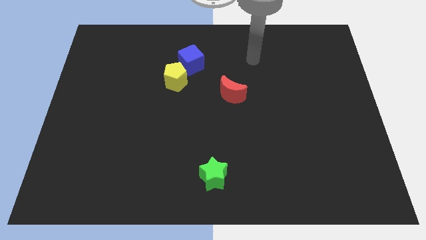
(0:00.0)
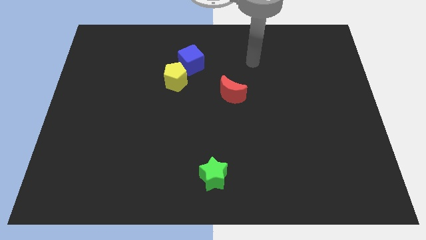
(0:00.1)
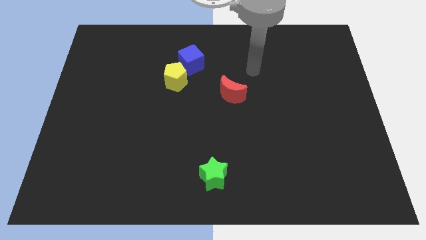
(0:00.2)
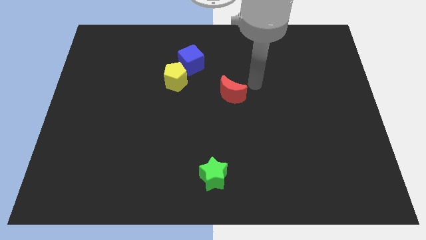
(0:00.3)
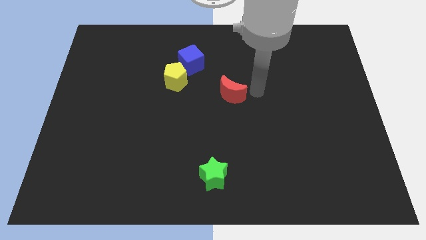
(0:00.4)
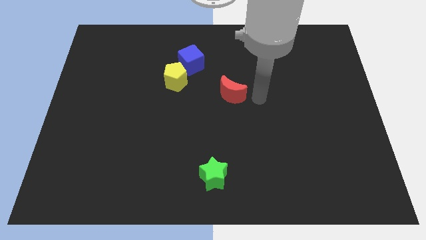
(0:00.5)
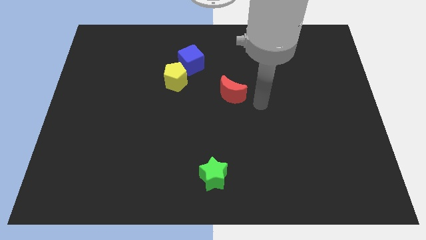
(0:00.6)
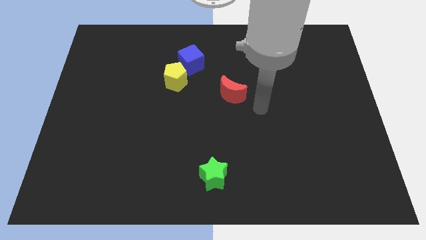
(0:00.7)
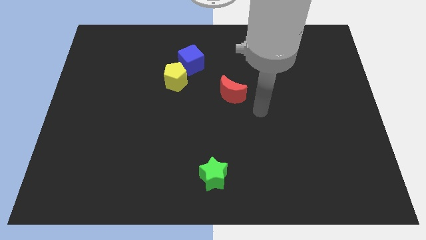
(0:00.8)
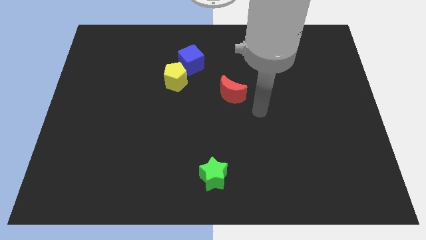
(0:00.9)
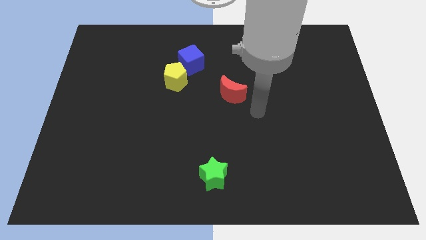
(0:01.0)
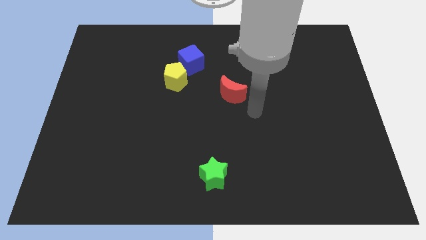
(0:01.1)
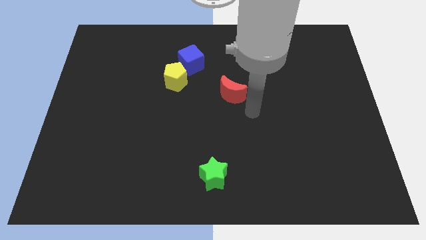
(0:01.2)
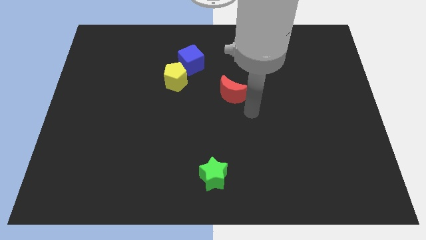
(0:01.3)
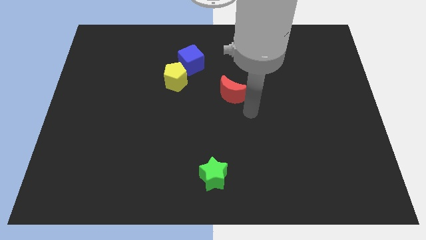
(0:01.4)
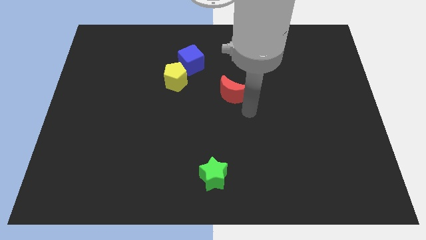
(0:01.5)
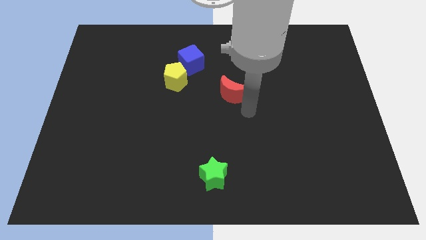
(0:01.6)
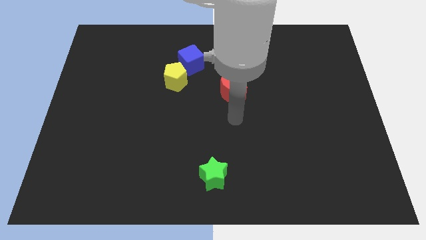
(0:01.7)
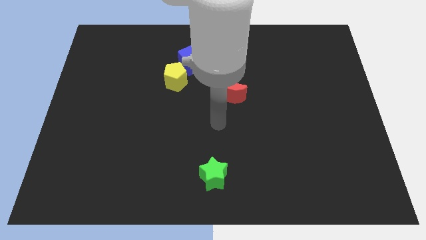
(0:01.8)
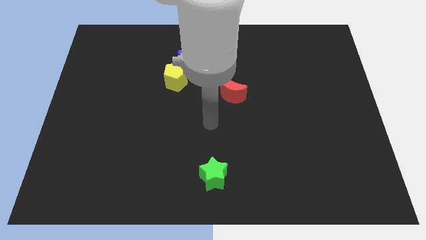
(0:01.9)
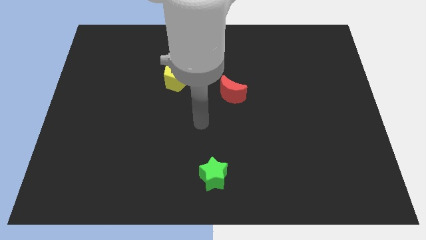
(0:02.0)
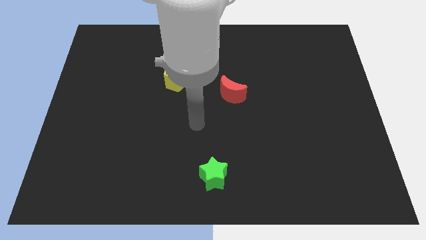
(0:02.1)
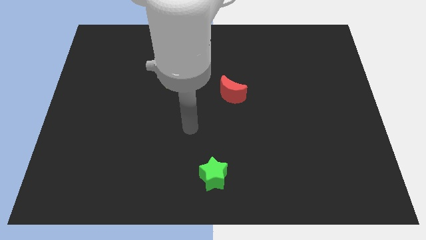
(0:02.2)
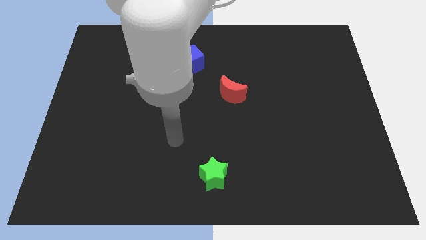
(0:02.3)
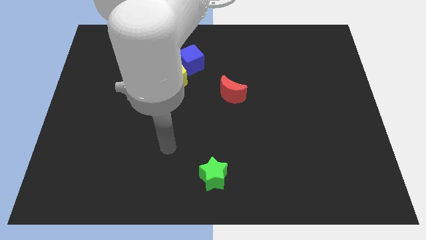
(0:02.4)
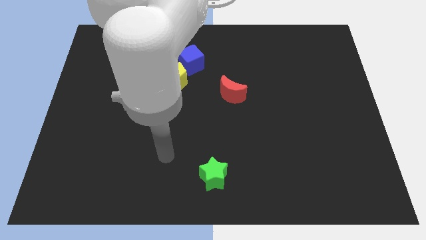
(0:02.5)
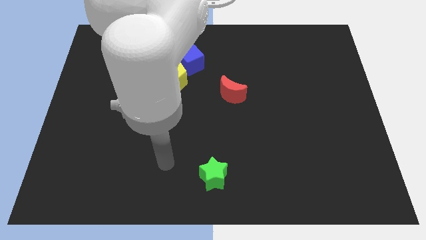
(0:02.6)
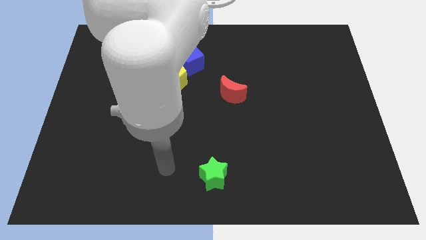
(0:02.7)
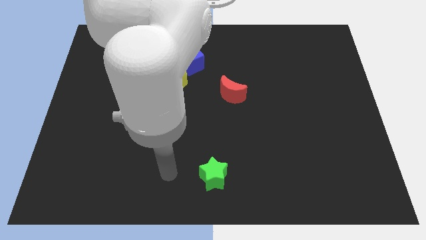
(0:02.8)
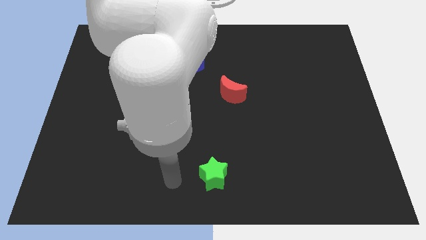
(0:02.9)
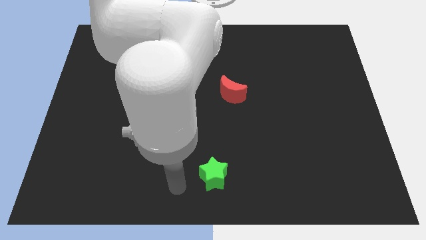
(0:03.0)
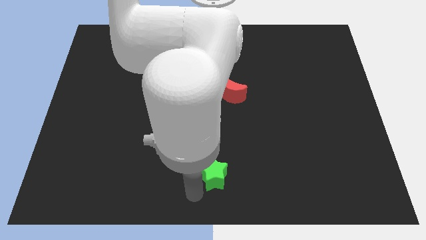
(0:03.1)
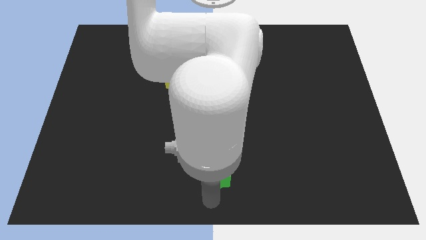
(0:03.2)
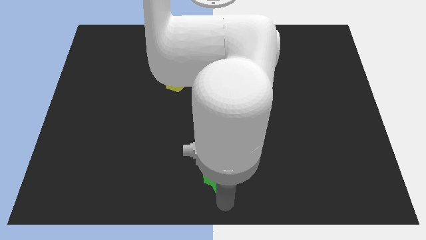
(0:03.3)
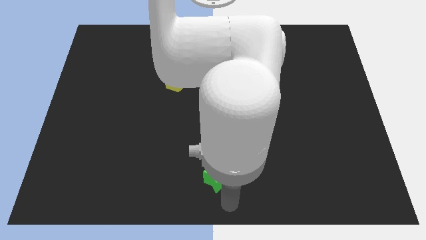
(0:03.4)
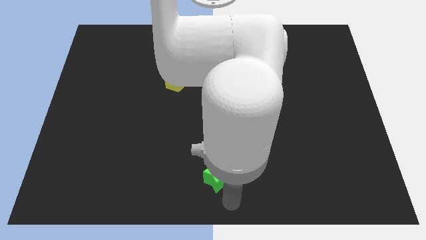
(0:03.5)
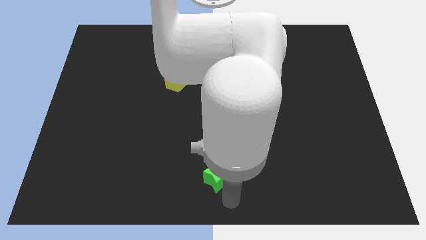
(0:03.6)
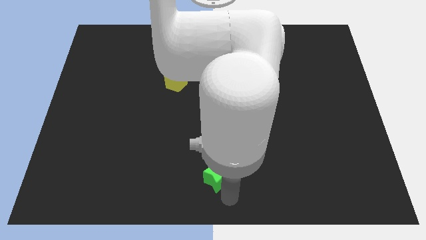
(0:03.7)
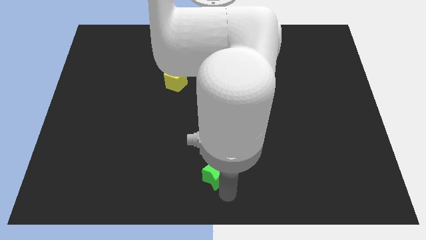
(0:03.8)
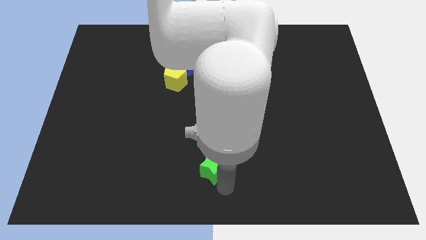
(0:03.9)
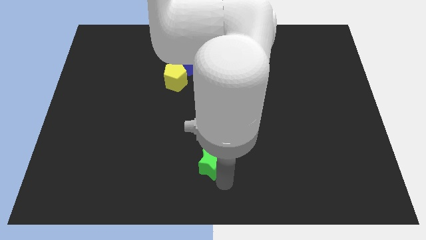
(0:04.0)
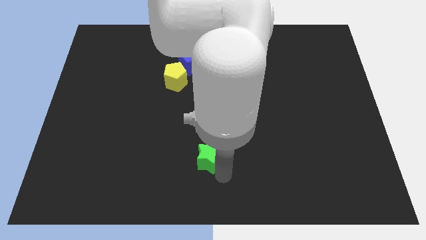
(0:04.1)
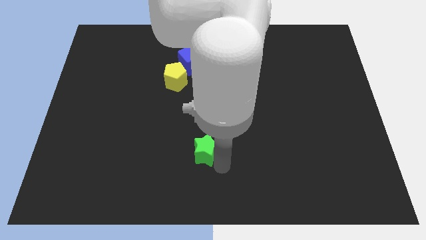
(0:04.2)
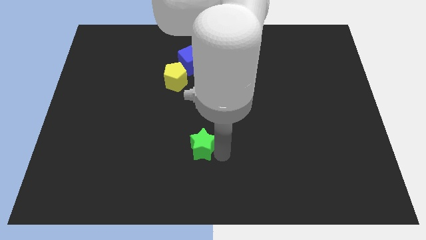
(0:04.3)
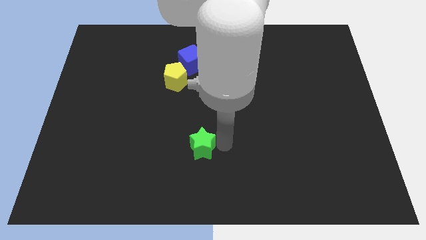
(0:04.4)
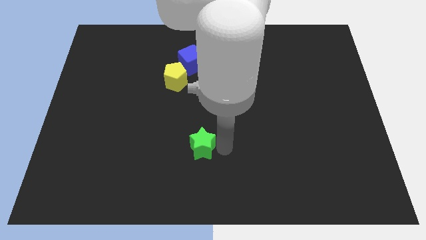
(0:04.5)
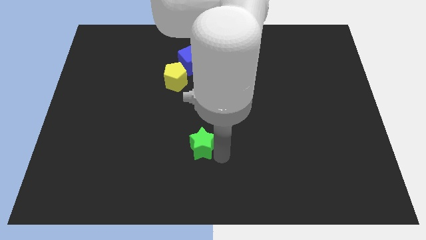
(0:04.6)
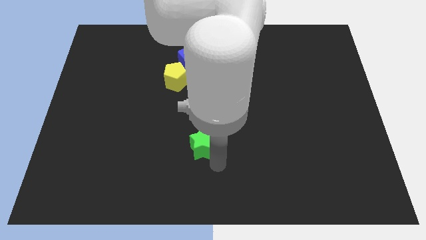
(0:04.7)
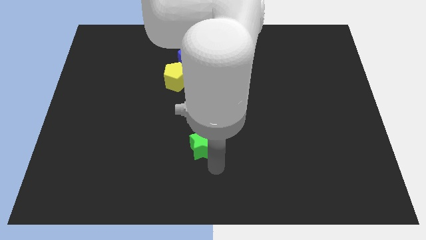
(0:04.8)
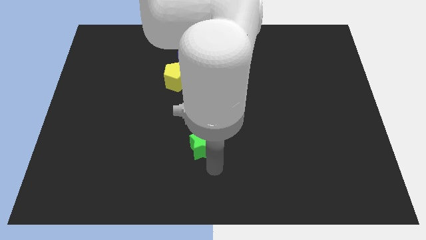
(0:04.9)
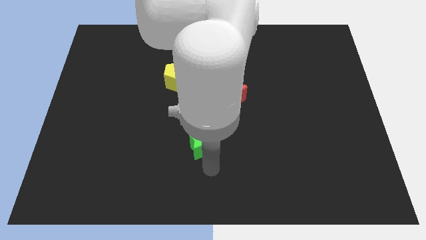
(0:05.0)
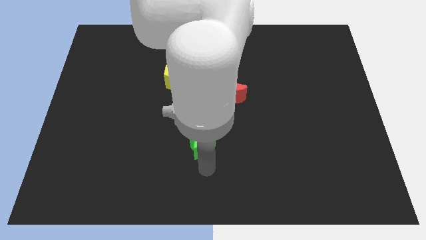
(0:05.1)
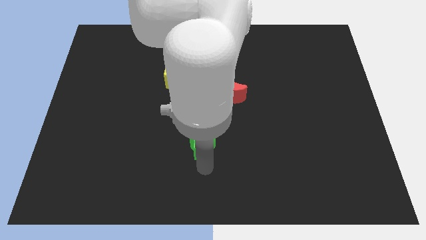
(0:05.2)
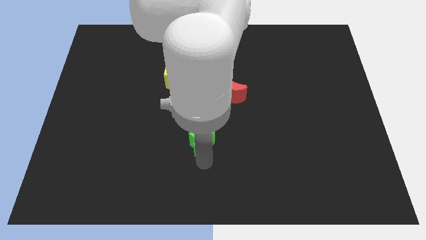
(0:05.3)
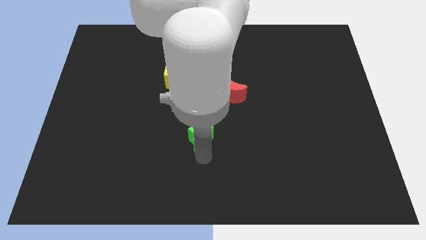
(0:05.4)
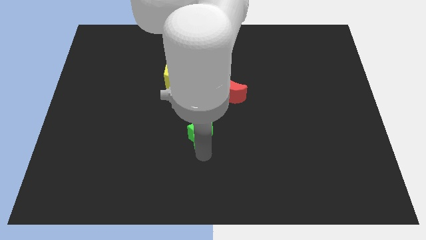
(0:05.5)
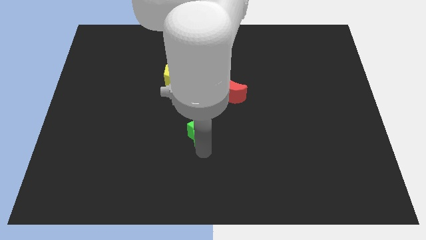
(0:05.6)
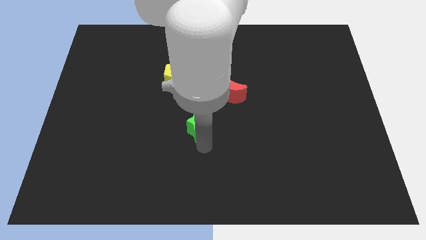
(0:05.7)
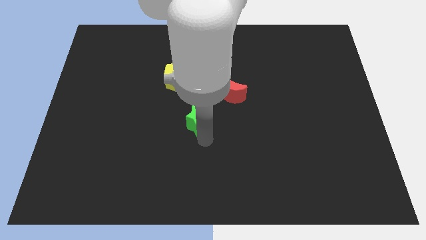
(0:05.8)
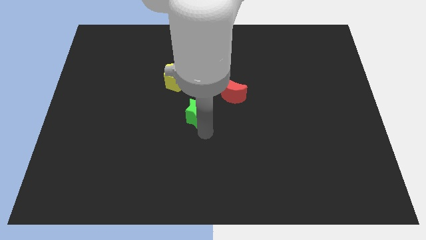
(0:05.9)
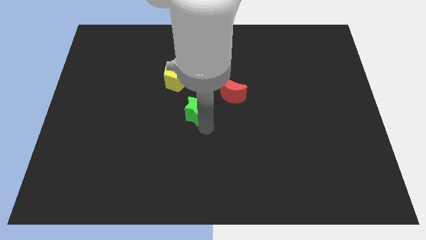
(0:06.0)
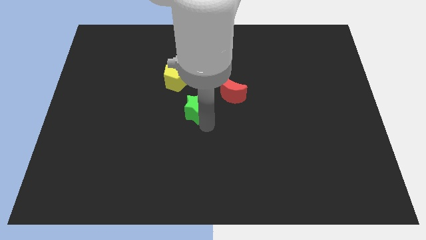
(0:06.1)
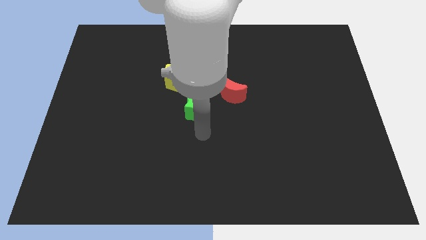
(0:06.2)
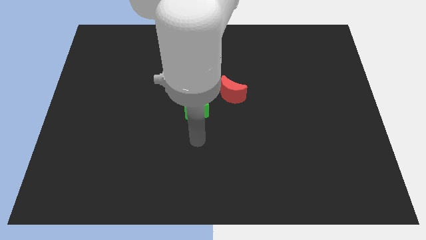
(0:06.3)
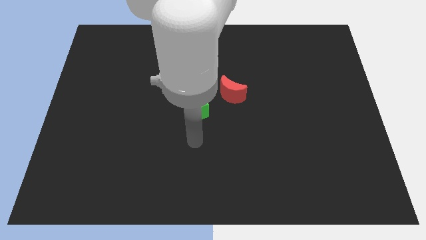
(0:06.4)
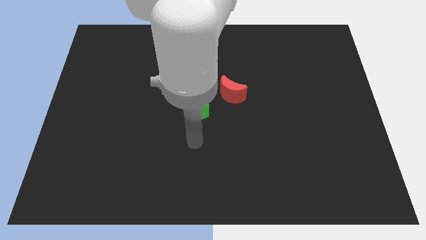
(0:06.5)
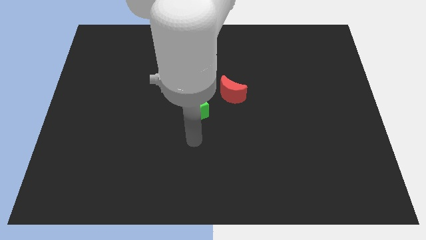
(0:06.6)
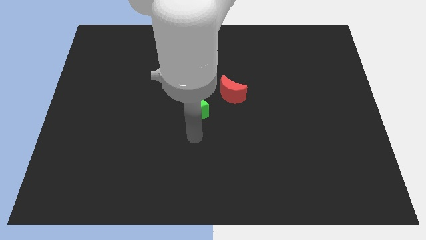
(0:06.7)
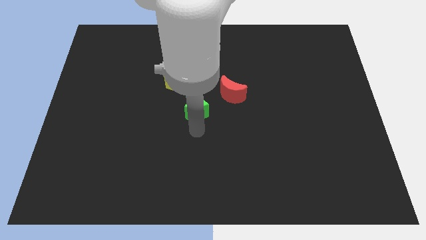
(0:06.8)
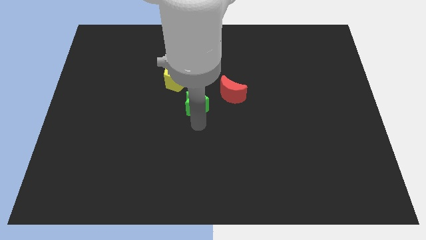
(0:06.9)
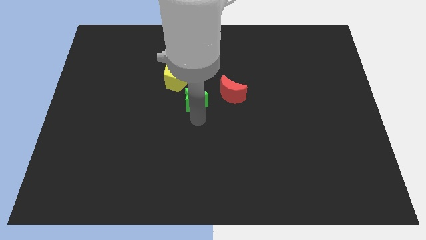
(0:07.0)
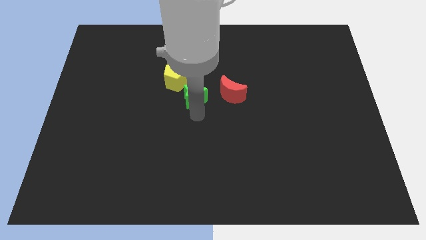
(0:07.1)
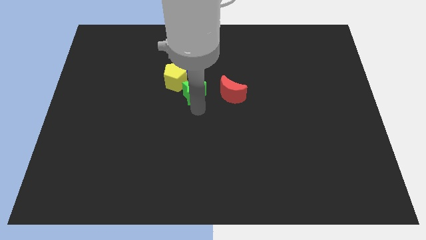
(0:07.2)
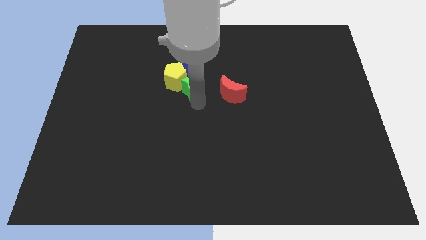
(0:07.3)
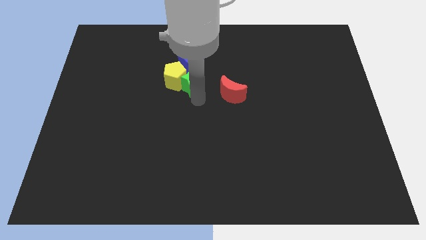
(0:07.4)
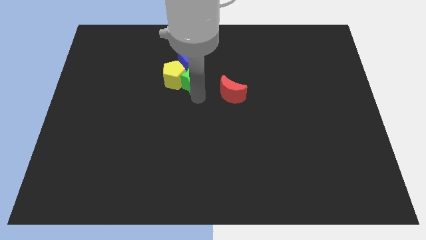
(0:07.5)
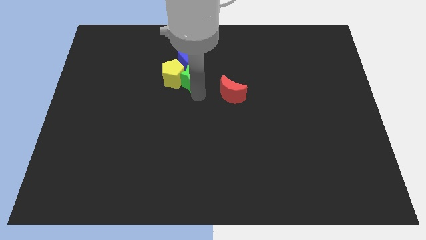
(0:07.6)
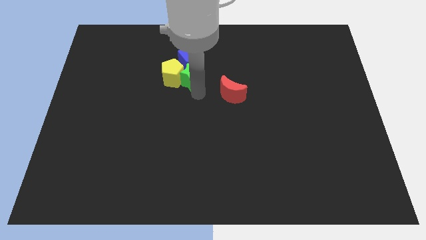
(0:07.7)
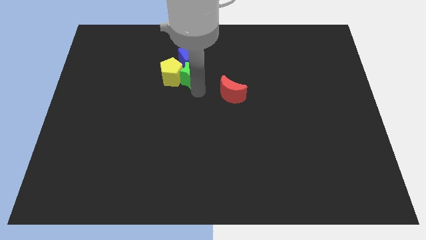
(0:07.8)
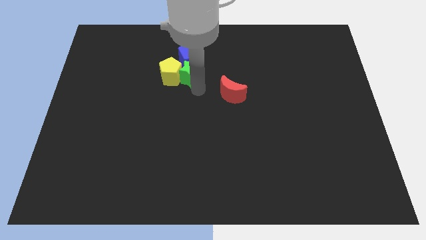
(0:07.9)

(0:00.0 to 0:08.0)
move the star to the cube

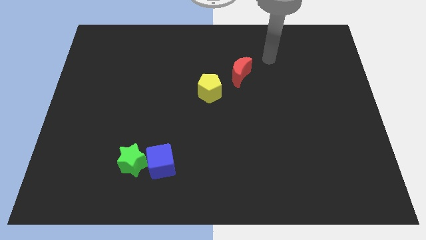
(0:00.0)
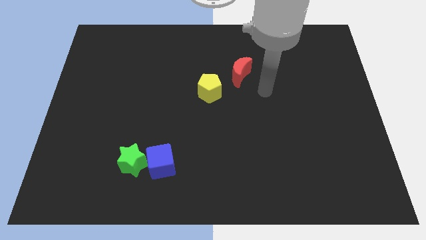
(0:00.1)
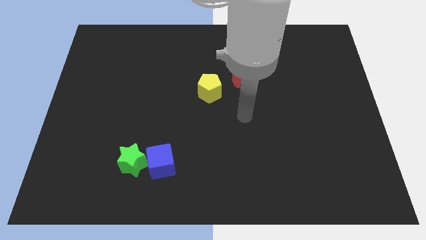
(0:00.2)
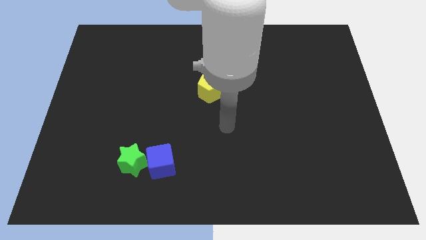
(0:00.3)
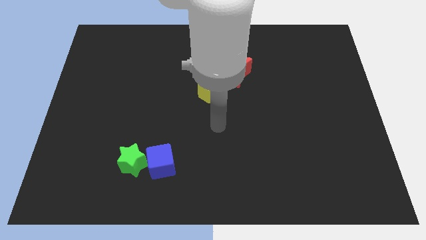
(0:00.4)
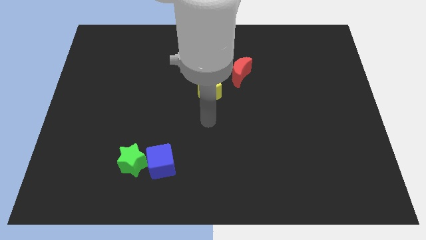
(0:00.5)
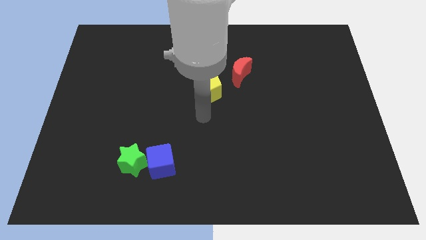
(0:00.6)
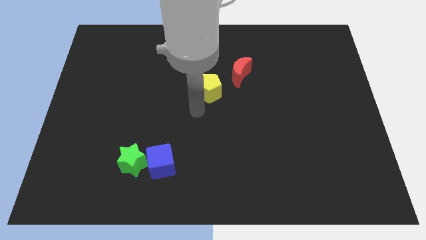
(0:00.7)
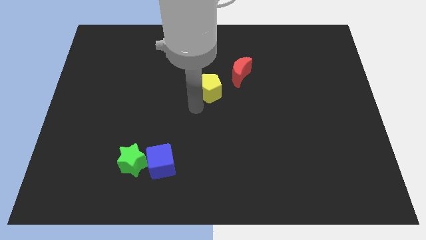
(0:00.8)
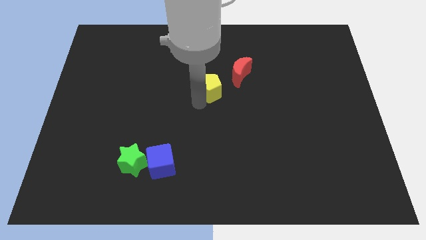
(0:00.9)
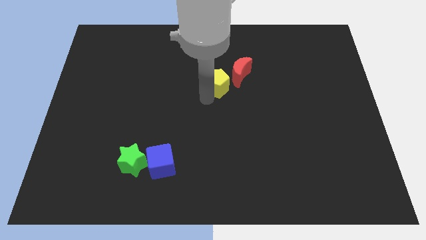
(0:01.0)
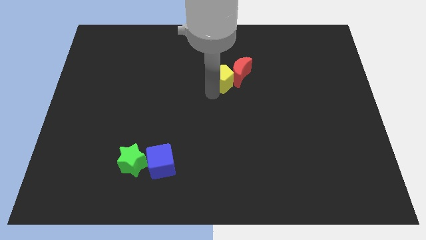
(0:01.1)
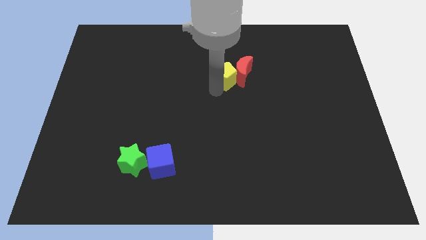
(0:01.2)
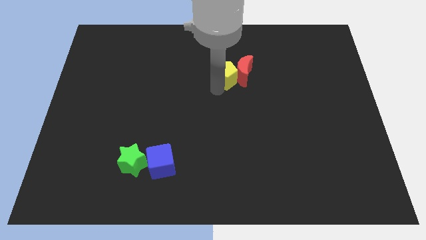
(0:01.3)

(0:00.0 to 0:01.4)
move the yellow pentagon towards the red block
